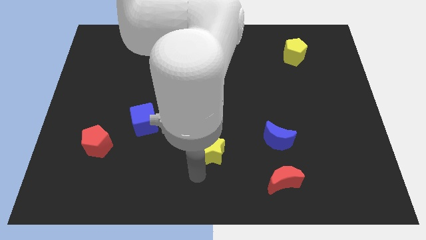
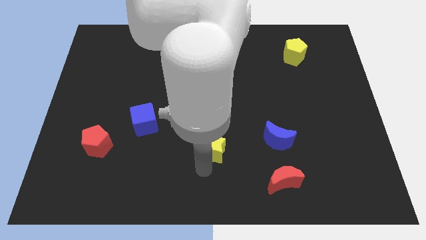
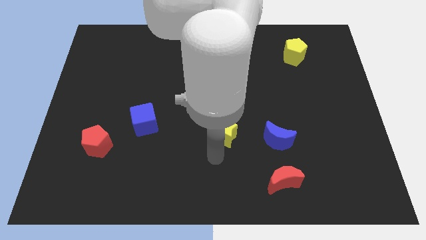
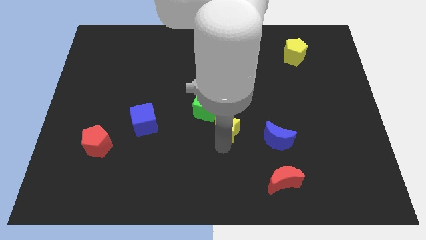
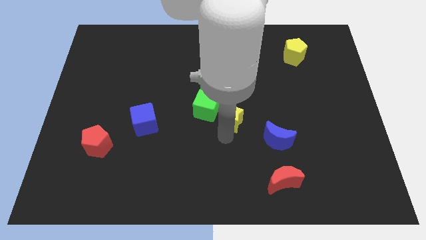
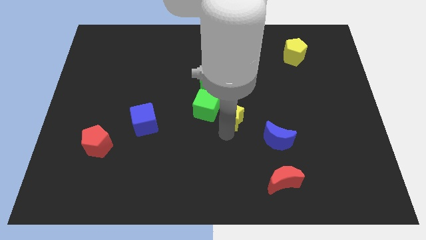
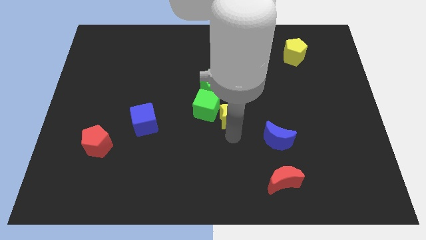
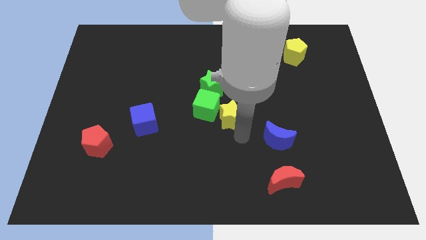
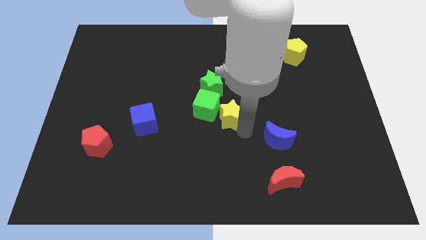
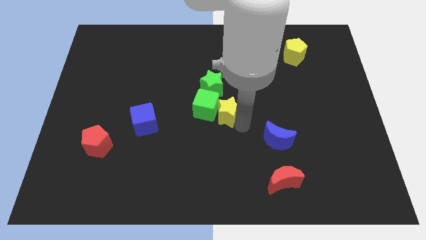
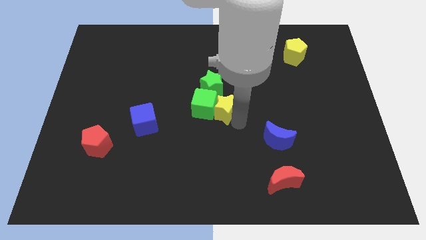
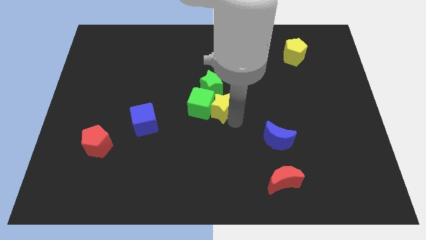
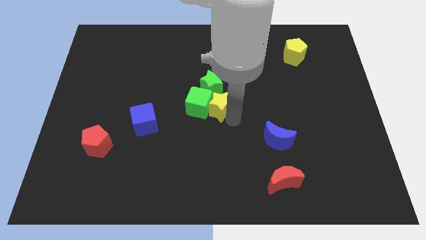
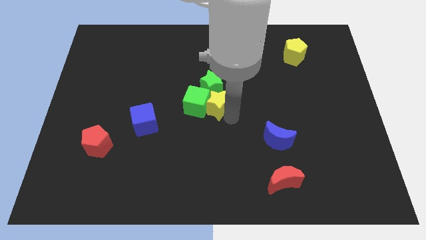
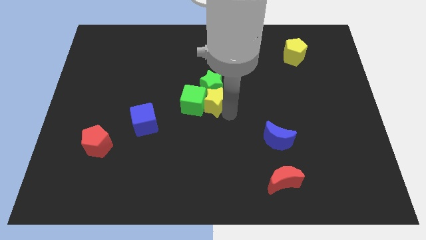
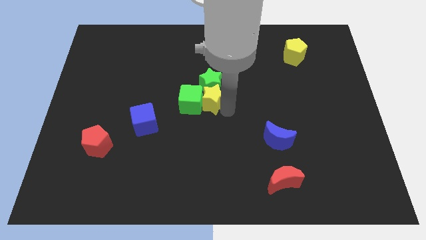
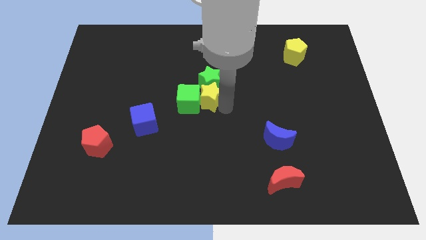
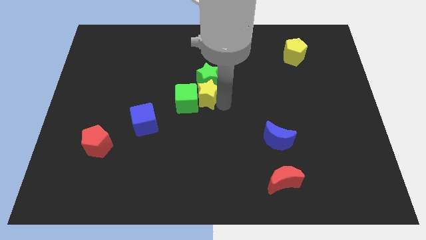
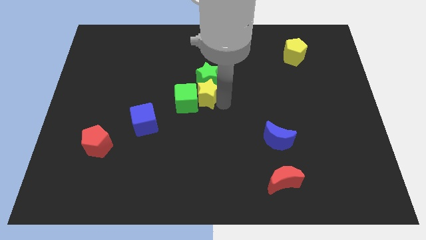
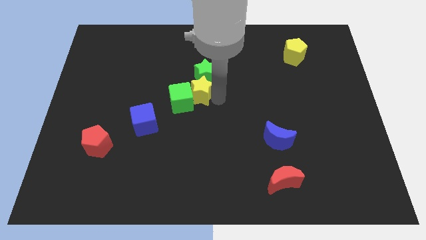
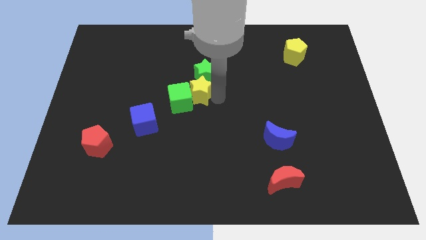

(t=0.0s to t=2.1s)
push the yellow star into the green cube

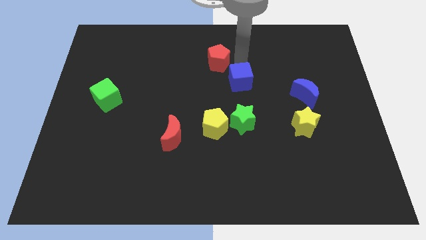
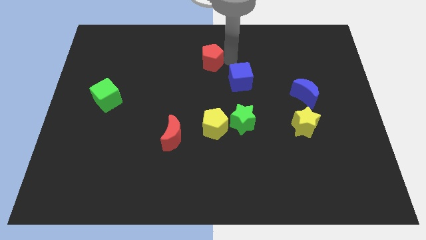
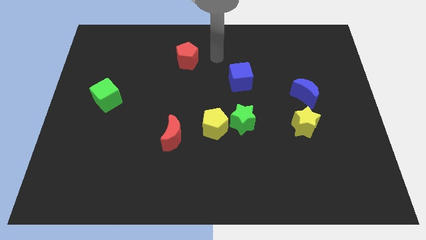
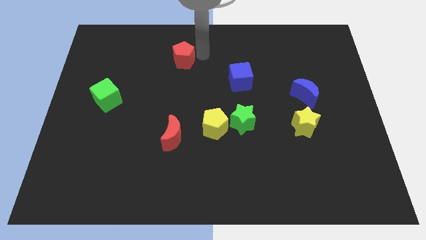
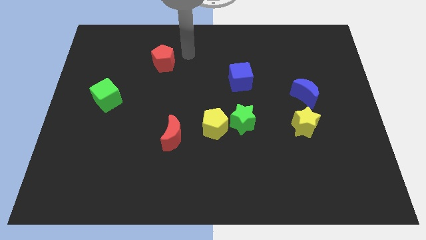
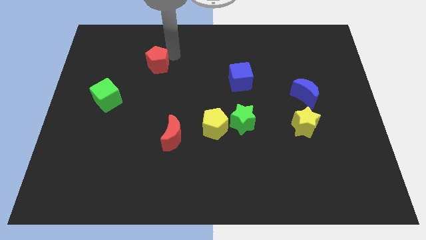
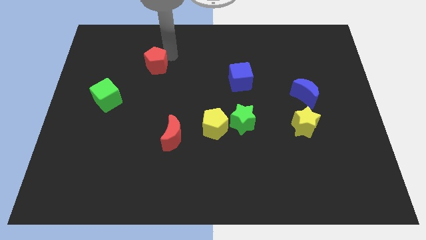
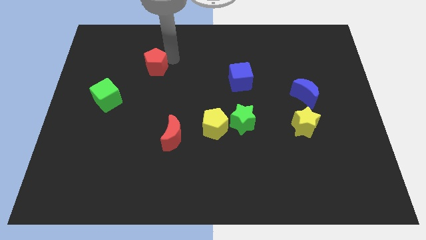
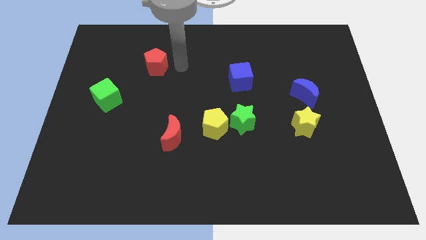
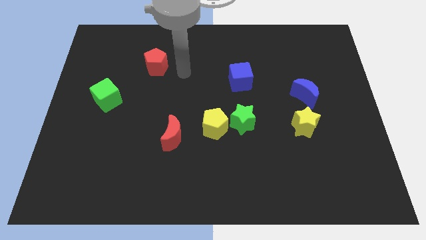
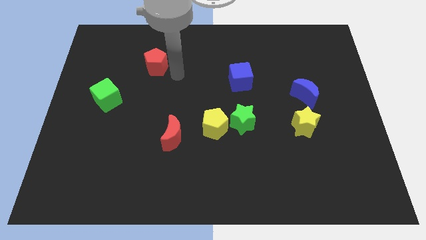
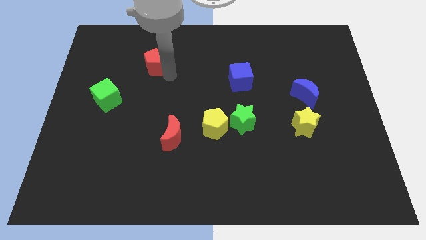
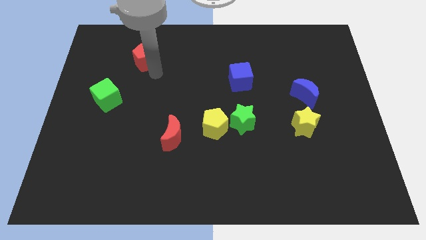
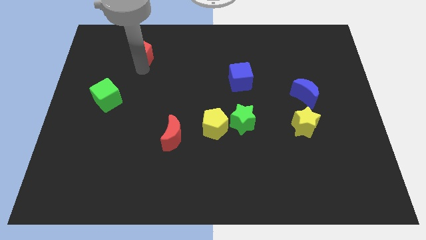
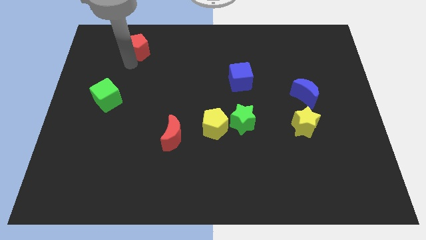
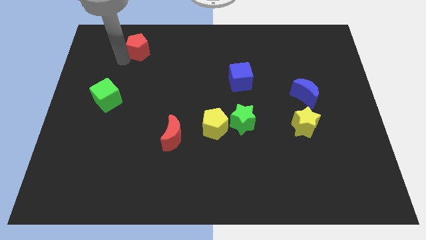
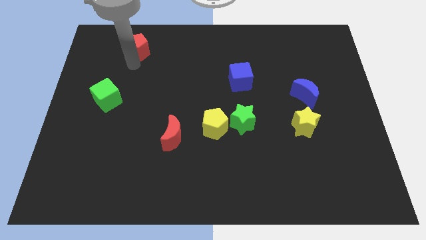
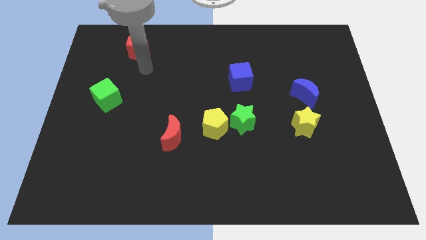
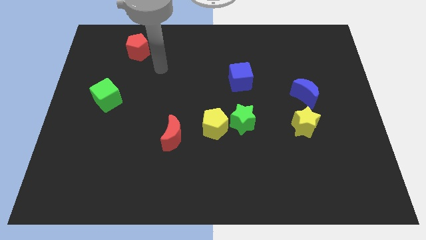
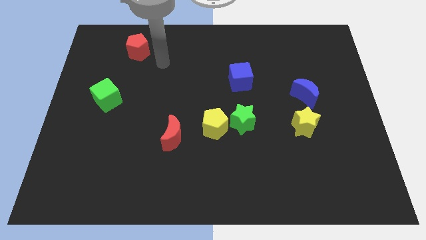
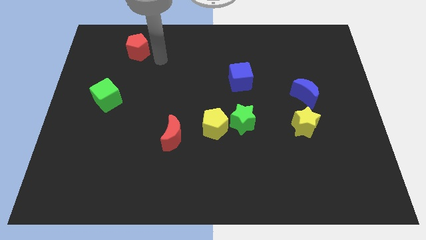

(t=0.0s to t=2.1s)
slide the red pentagon to the top right side of the green cube

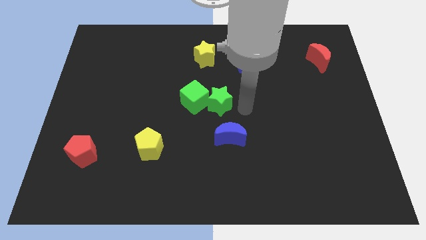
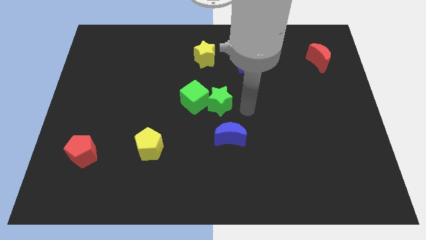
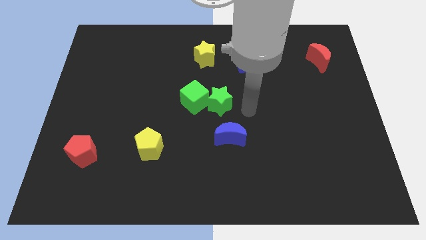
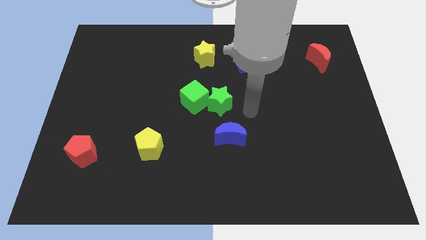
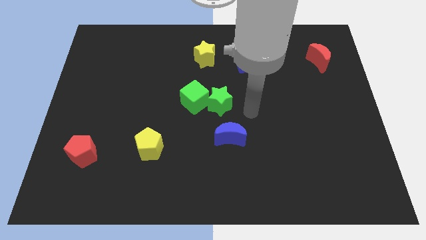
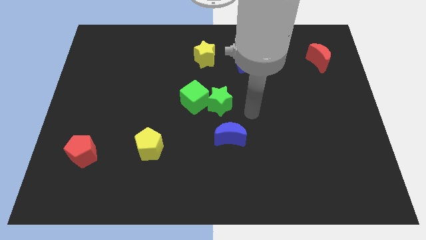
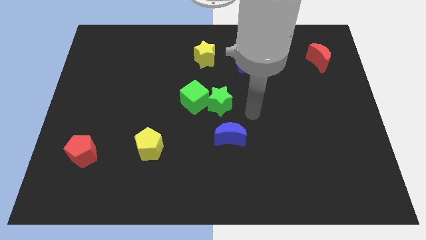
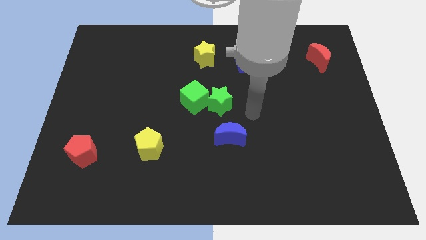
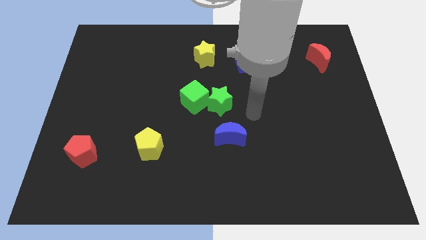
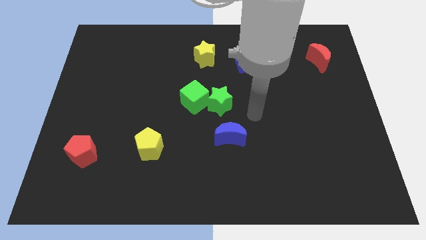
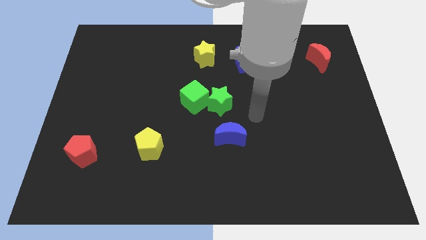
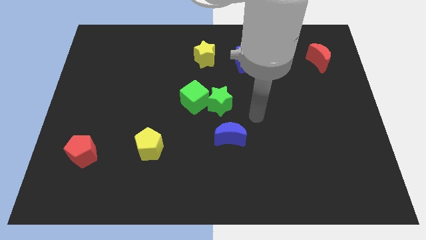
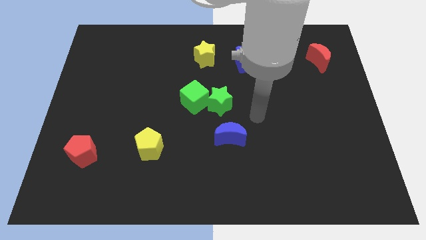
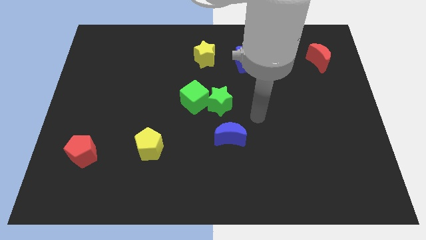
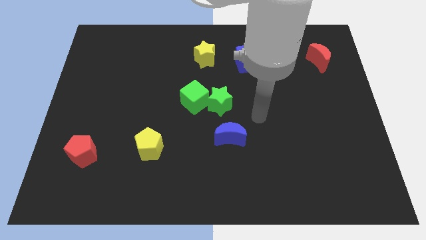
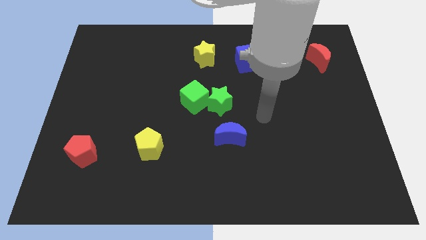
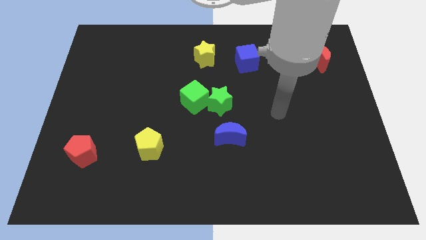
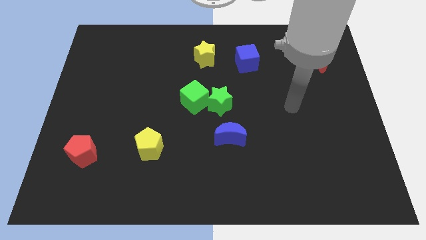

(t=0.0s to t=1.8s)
move yourself away from the green star

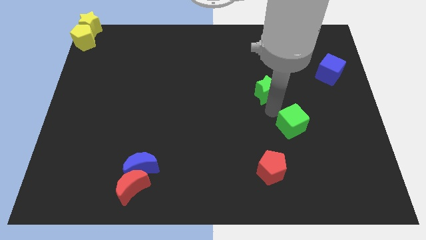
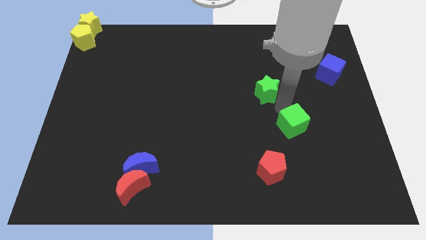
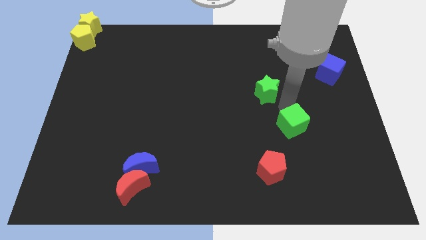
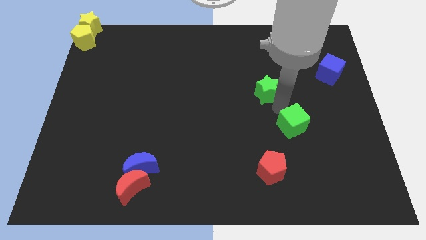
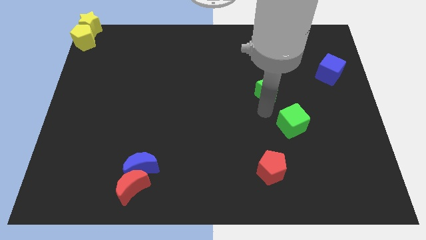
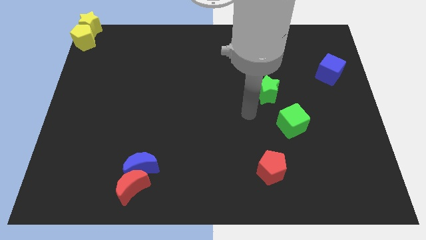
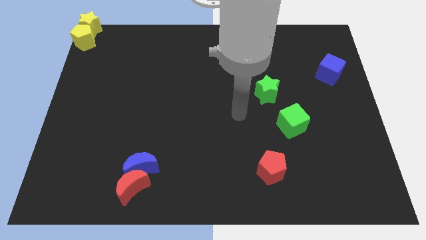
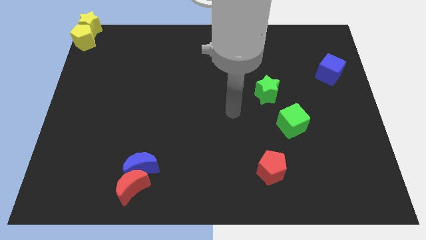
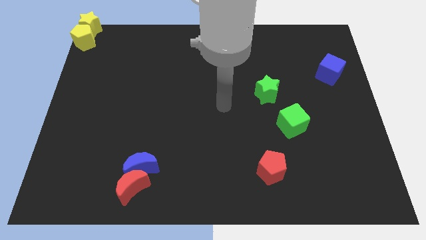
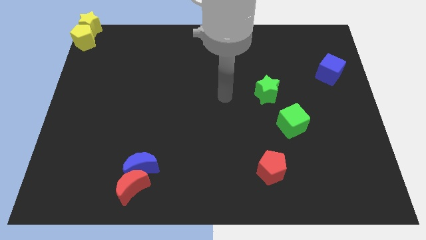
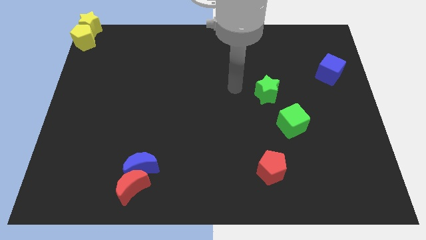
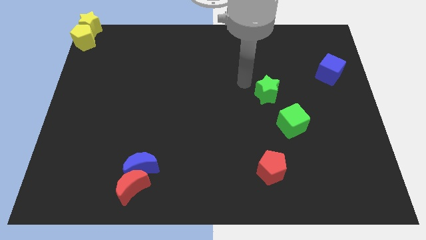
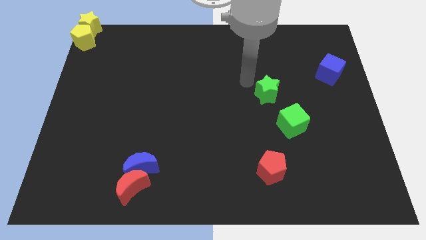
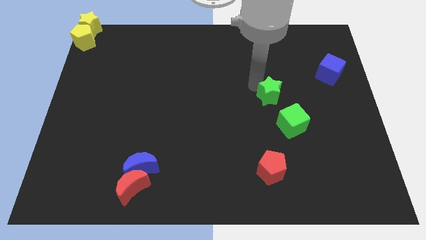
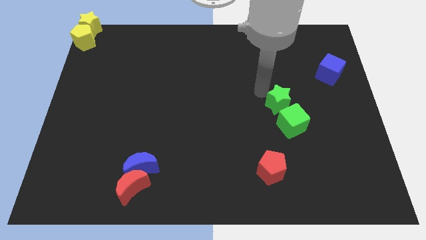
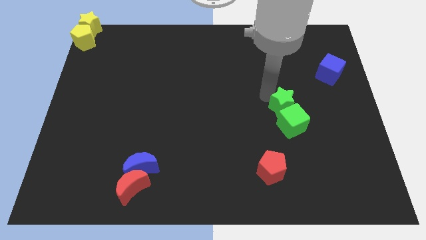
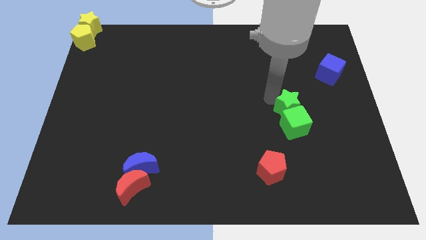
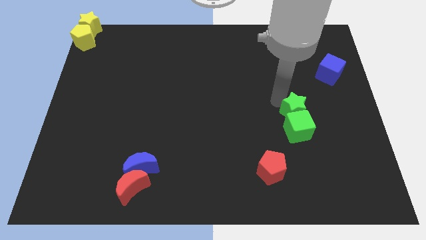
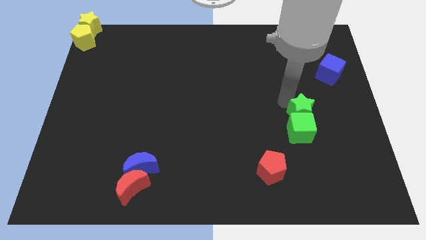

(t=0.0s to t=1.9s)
place green star above green cube

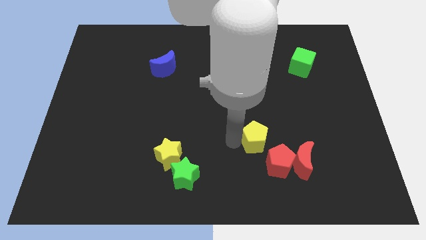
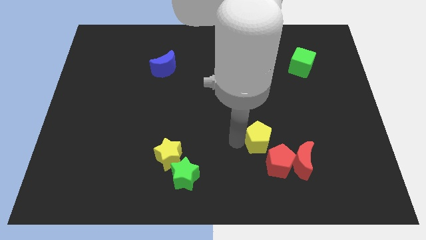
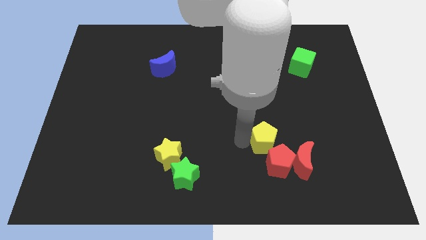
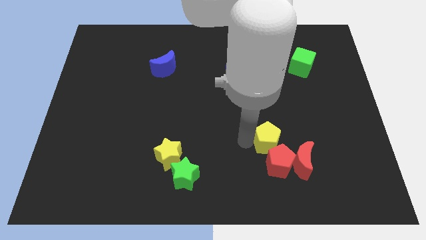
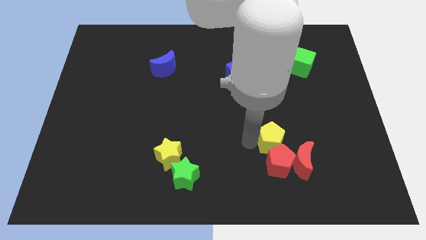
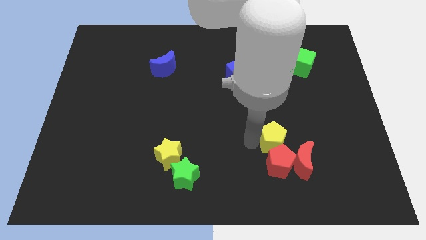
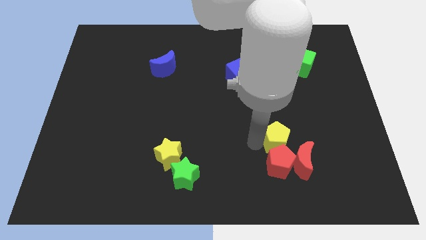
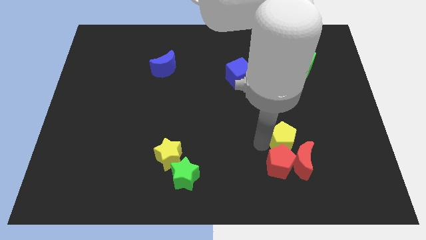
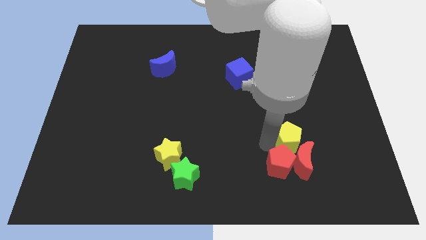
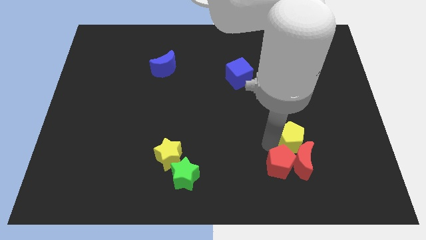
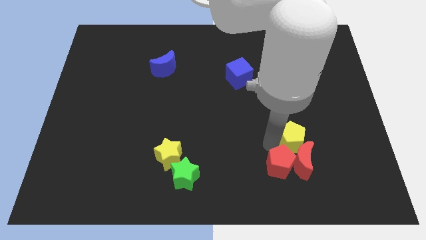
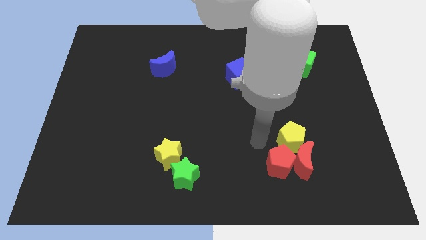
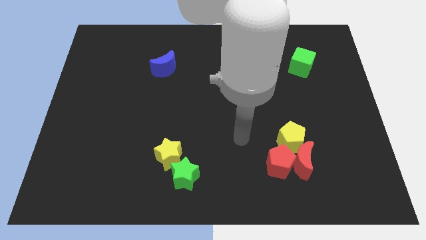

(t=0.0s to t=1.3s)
put the yellow pentagon at the top of the group of red blocks
